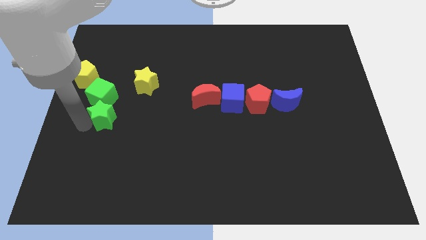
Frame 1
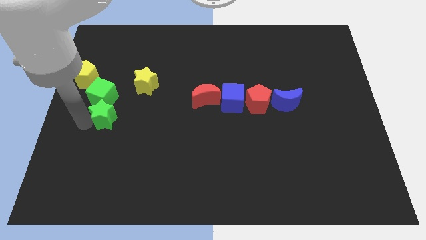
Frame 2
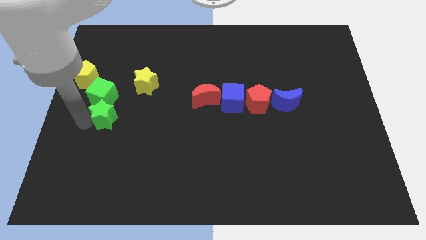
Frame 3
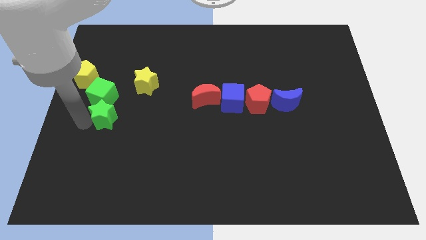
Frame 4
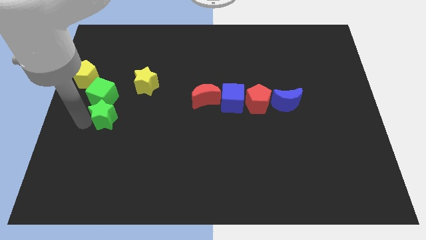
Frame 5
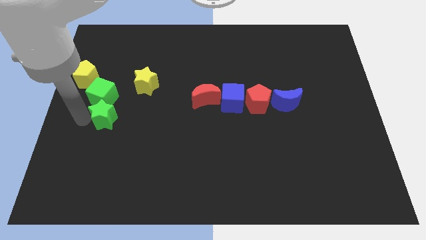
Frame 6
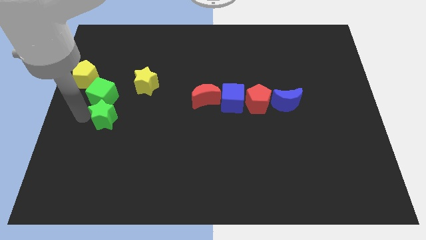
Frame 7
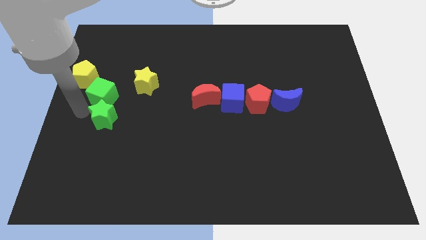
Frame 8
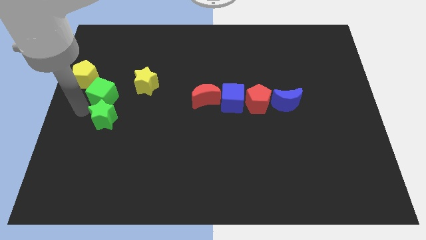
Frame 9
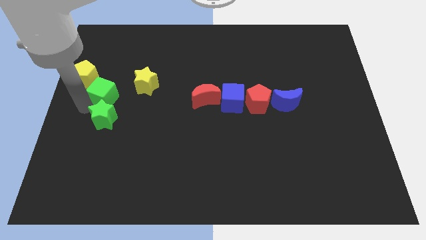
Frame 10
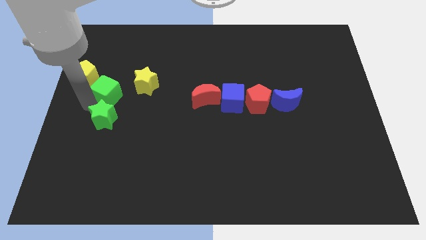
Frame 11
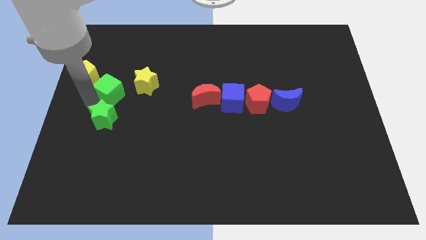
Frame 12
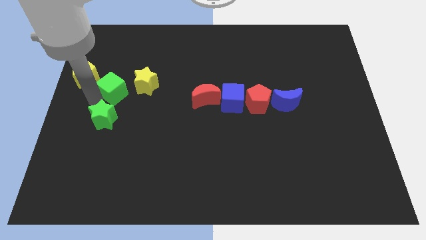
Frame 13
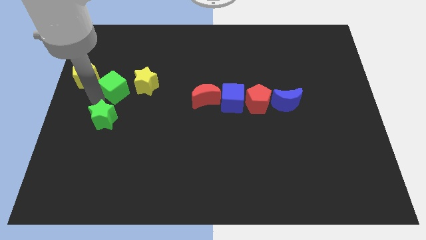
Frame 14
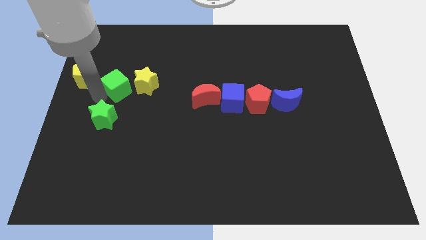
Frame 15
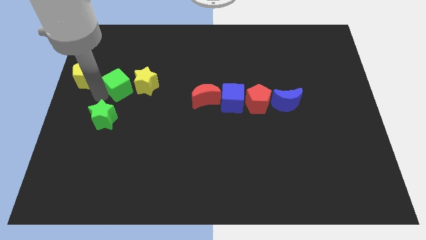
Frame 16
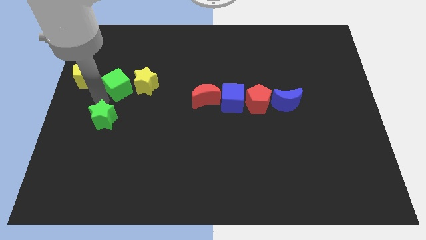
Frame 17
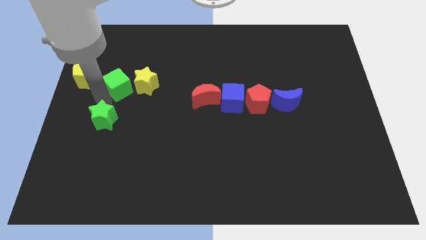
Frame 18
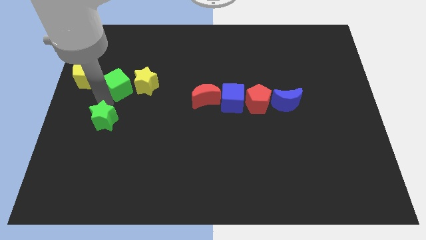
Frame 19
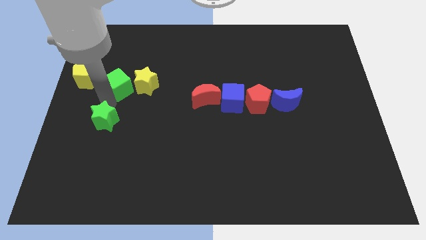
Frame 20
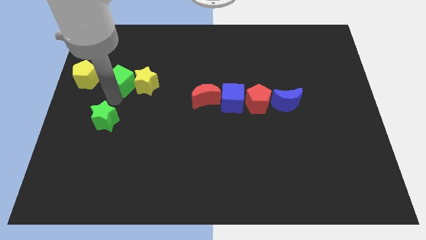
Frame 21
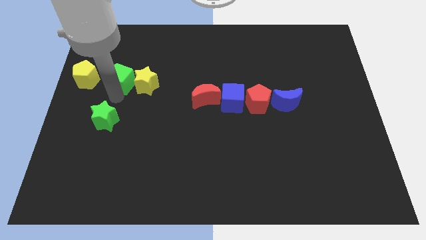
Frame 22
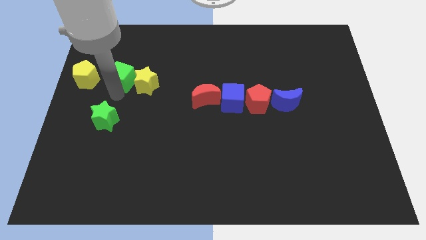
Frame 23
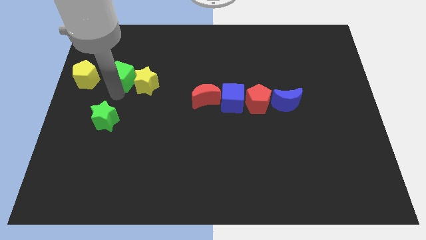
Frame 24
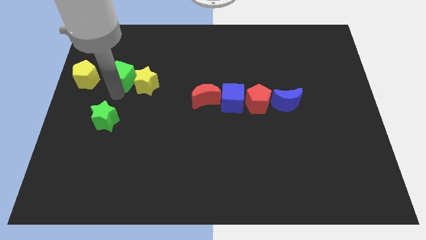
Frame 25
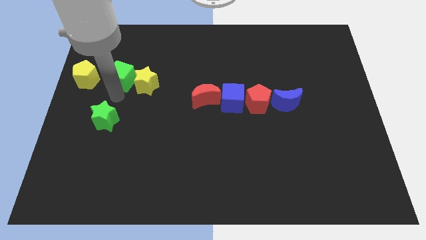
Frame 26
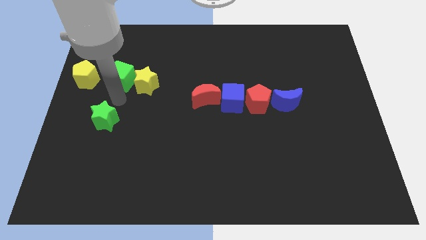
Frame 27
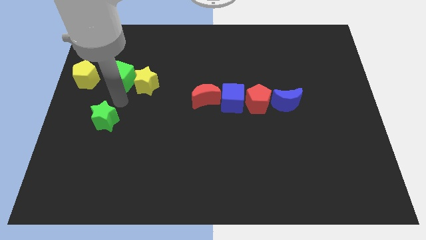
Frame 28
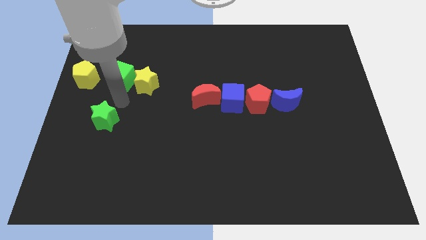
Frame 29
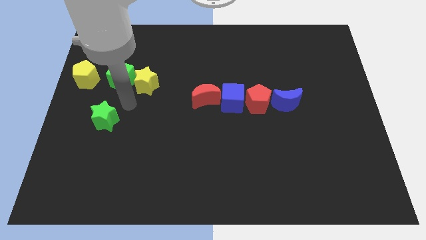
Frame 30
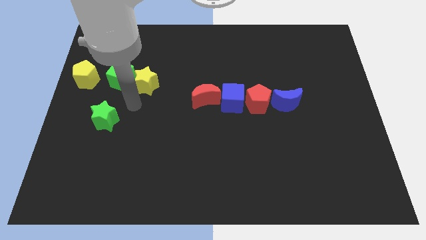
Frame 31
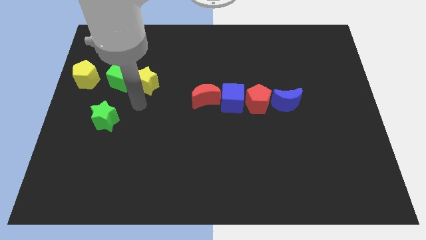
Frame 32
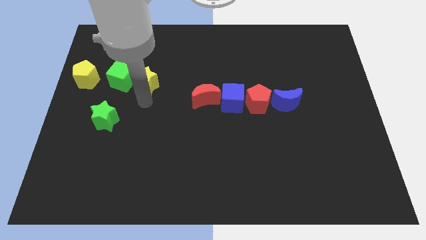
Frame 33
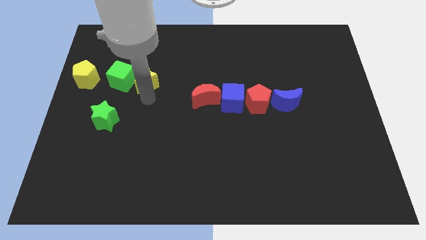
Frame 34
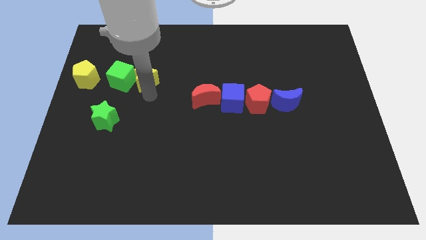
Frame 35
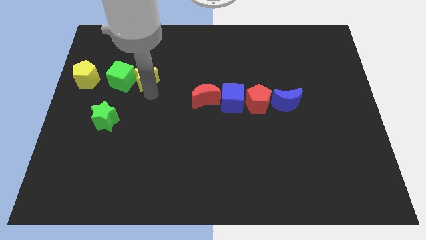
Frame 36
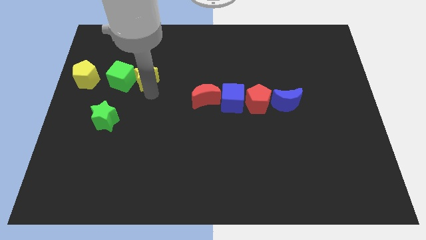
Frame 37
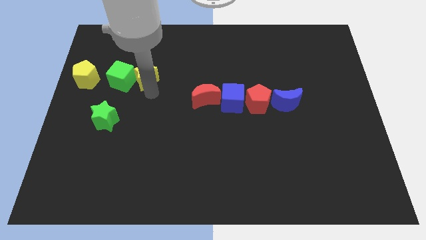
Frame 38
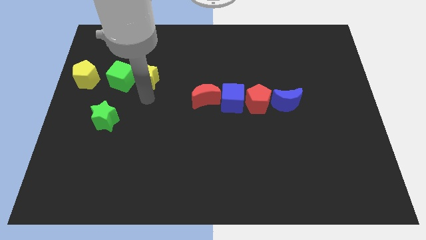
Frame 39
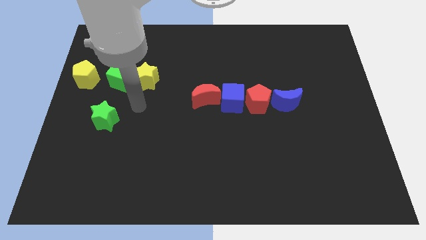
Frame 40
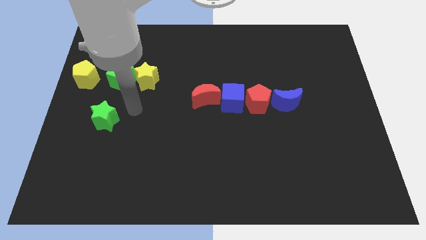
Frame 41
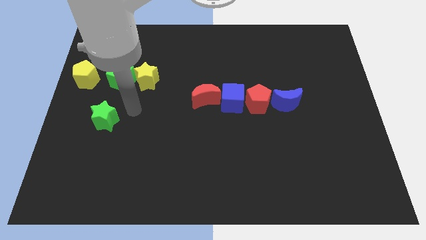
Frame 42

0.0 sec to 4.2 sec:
place green cube to the left of yellow star

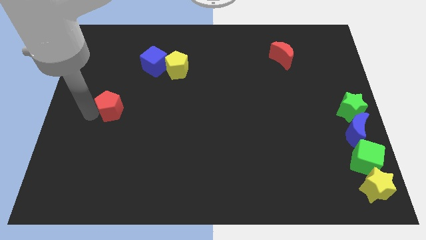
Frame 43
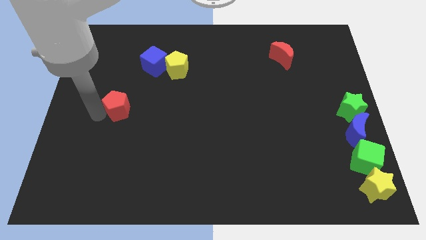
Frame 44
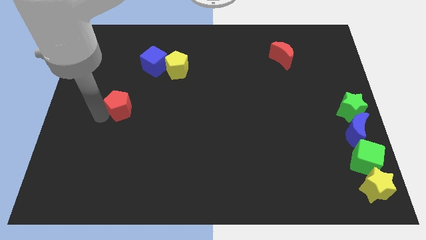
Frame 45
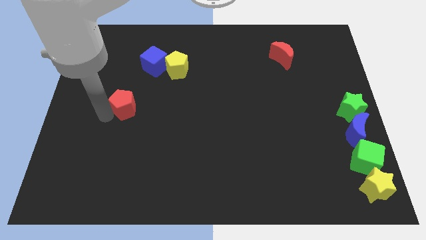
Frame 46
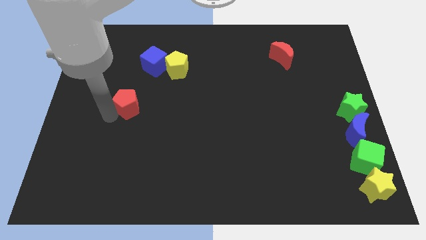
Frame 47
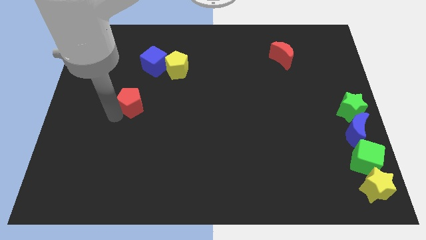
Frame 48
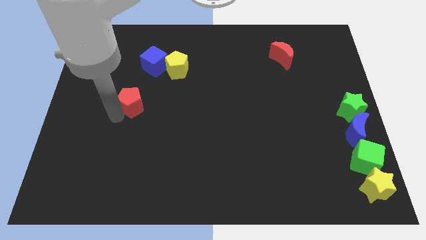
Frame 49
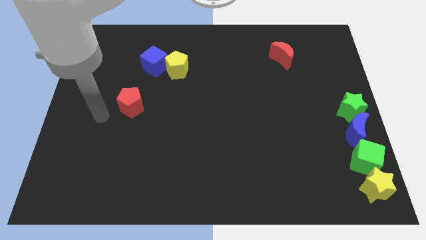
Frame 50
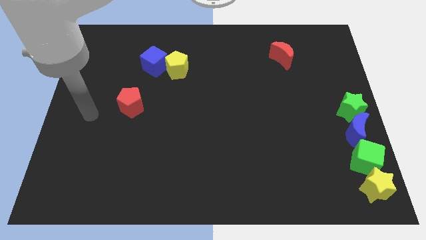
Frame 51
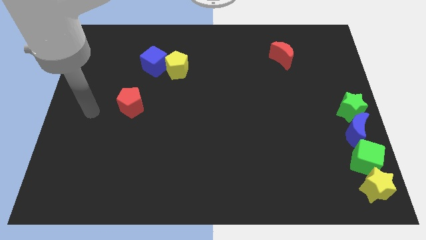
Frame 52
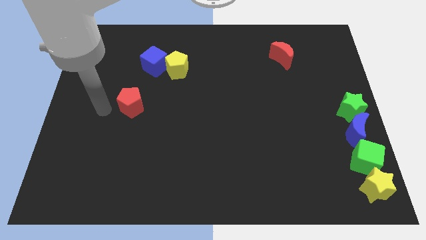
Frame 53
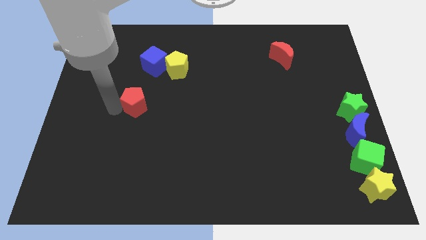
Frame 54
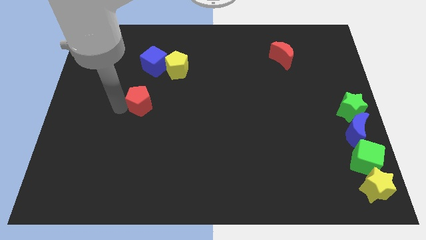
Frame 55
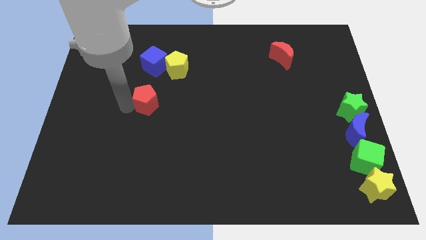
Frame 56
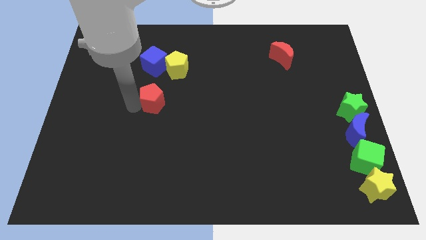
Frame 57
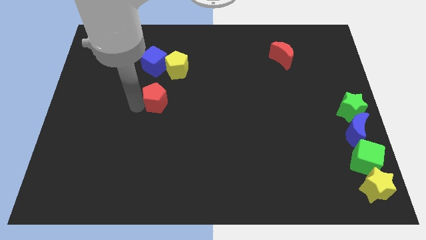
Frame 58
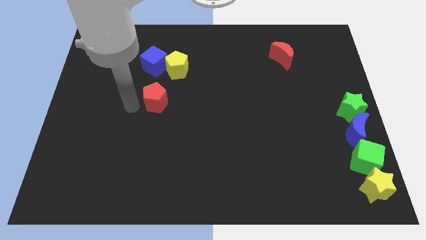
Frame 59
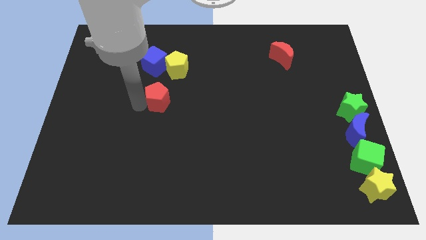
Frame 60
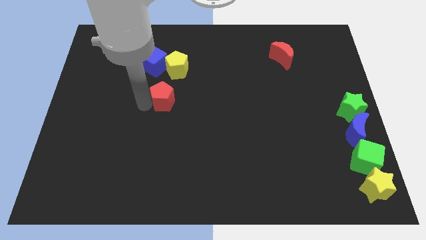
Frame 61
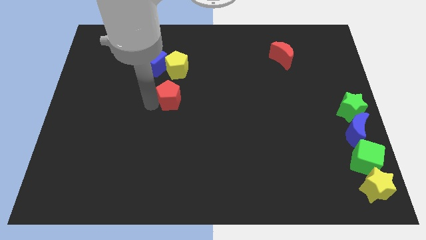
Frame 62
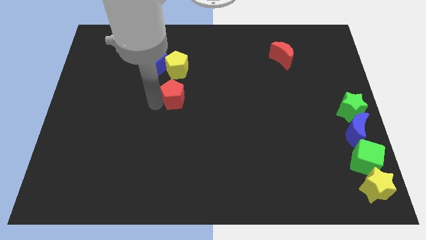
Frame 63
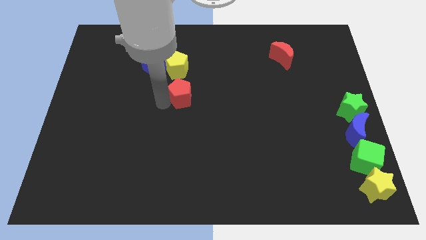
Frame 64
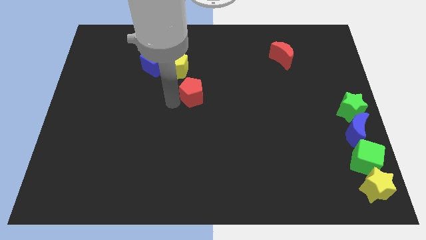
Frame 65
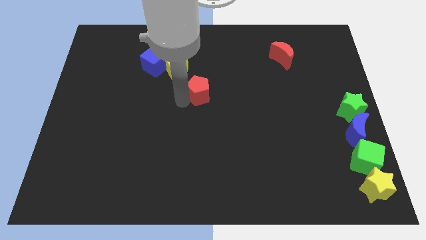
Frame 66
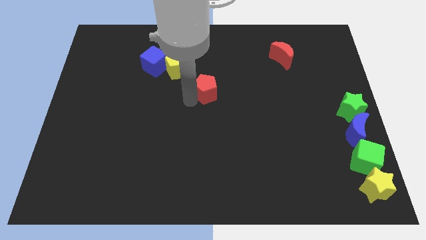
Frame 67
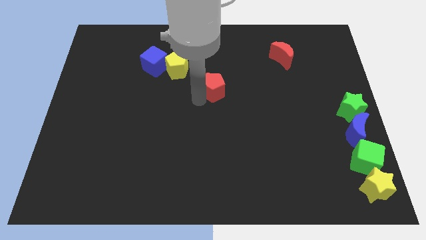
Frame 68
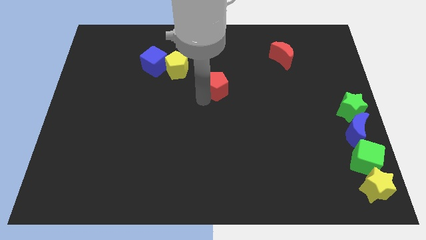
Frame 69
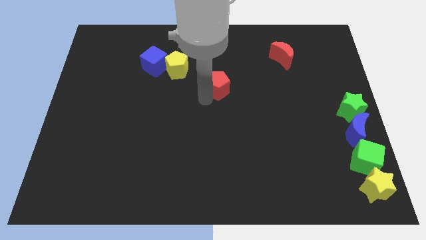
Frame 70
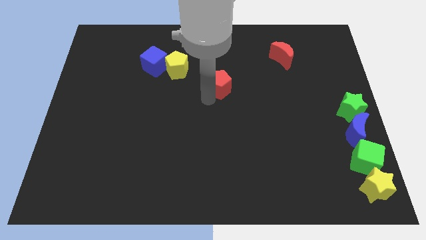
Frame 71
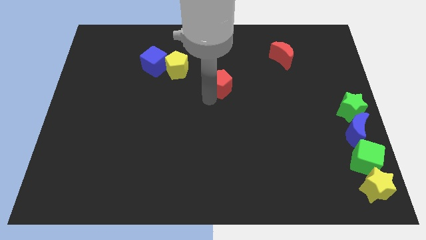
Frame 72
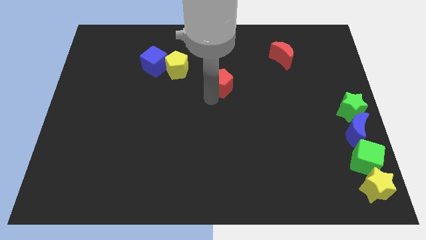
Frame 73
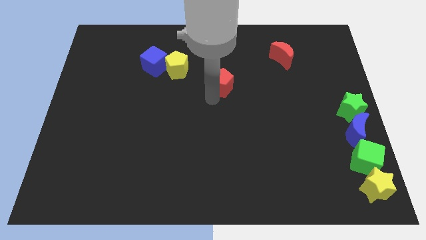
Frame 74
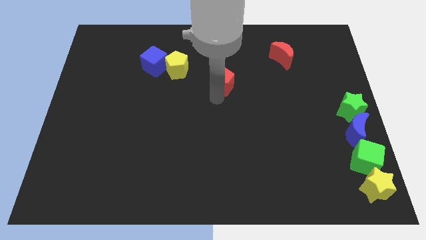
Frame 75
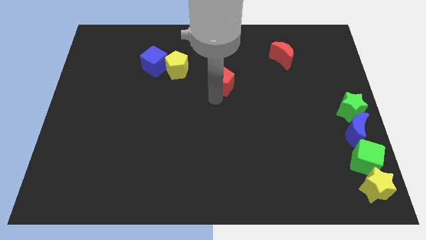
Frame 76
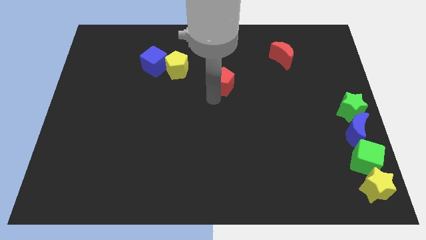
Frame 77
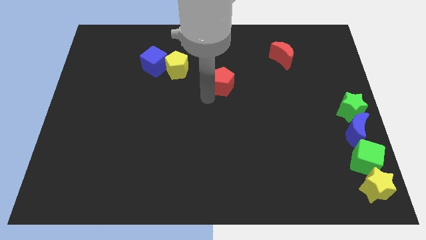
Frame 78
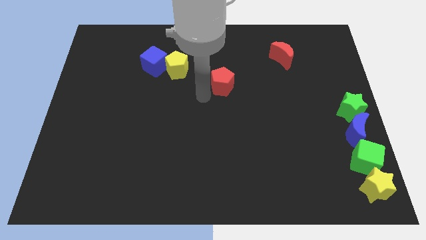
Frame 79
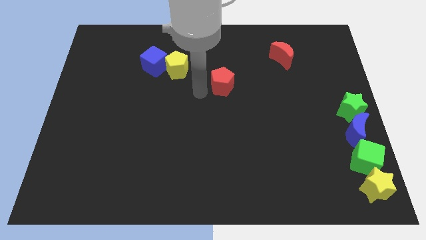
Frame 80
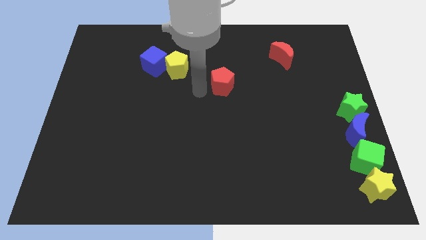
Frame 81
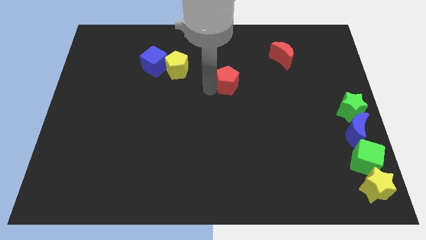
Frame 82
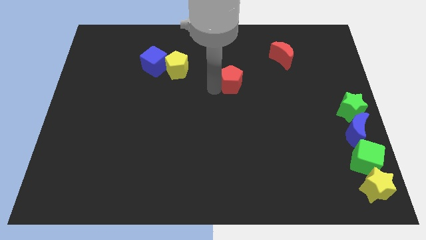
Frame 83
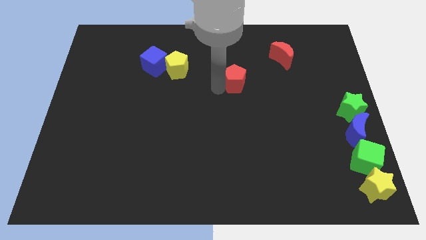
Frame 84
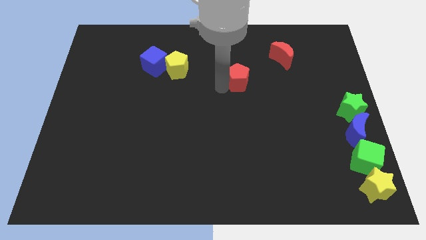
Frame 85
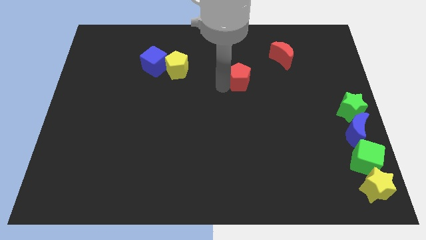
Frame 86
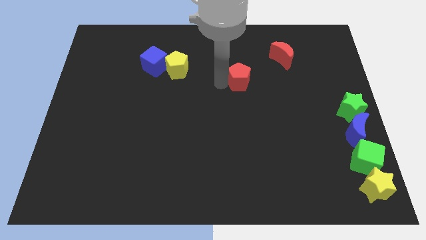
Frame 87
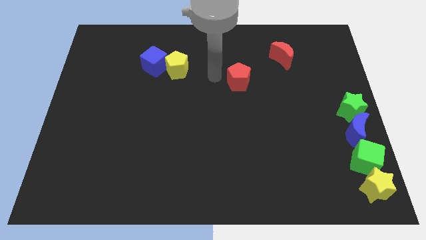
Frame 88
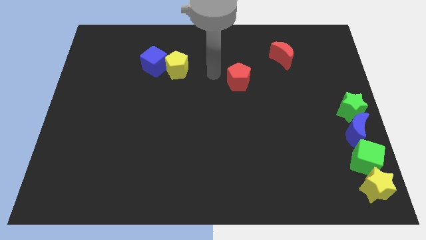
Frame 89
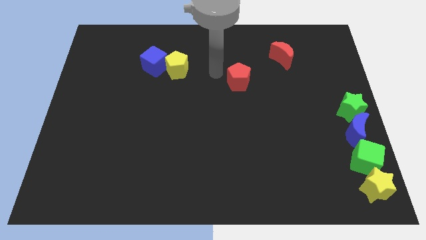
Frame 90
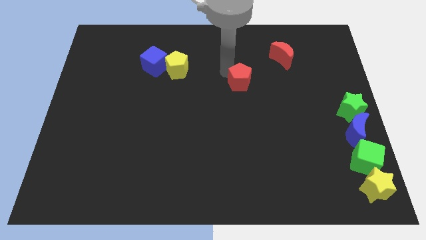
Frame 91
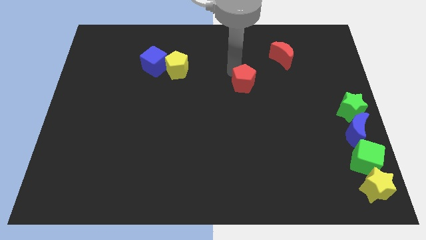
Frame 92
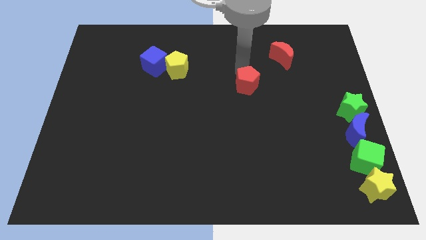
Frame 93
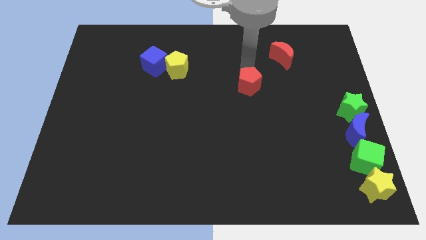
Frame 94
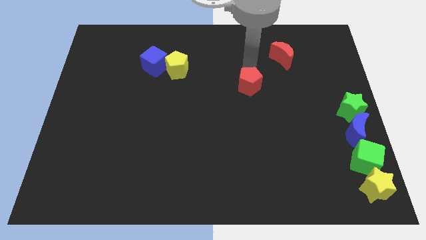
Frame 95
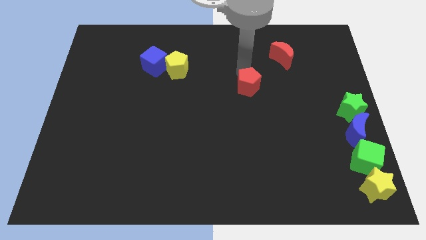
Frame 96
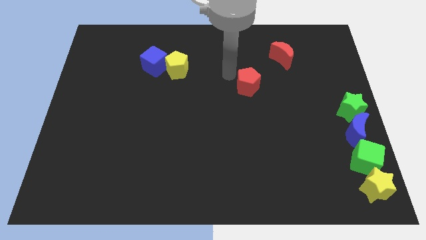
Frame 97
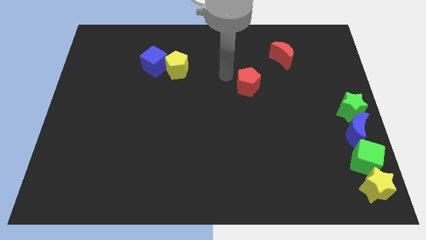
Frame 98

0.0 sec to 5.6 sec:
push red pentagon
